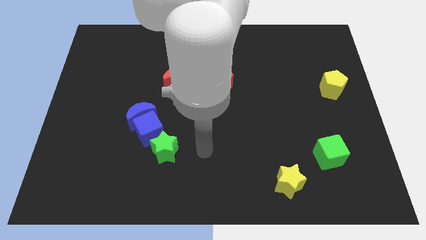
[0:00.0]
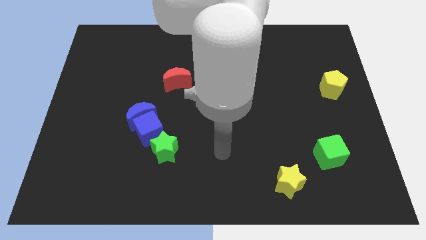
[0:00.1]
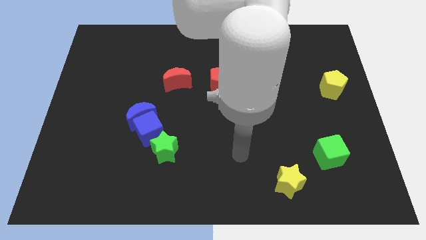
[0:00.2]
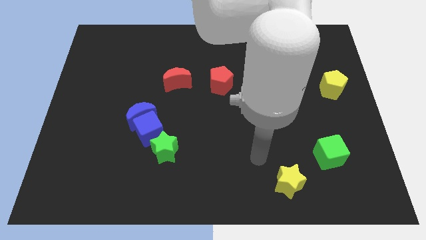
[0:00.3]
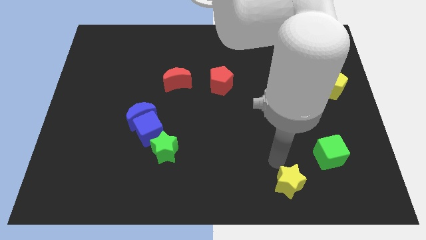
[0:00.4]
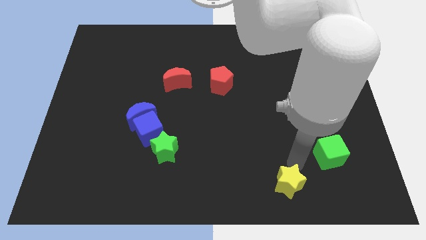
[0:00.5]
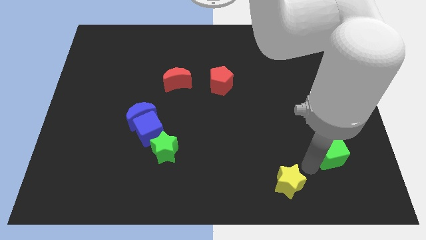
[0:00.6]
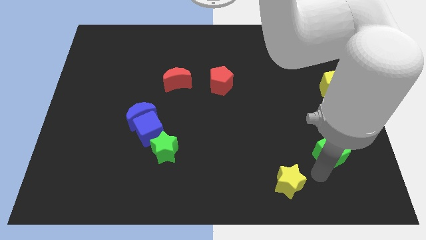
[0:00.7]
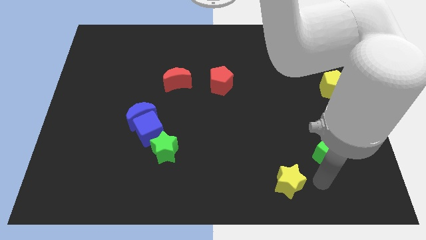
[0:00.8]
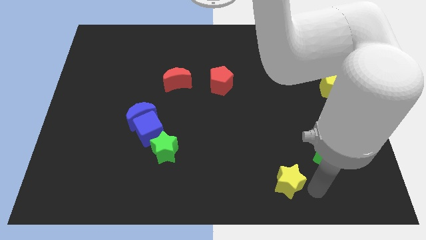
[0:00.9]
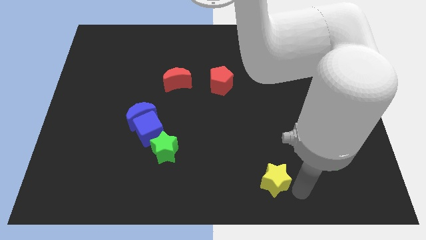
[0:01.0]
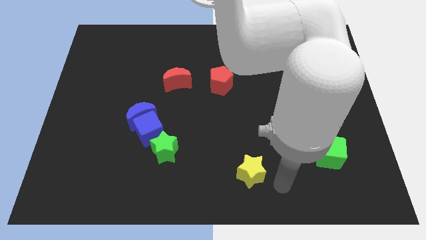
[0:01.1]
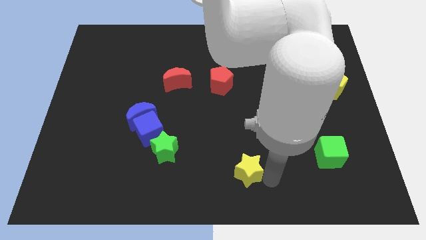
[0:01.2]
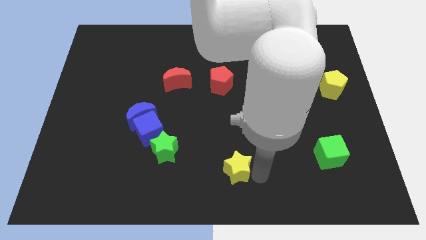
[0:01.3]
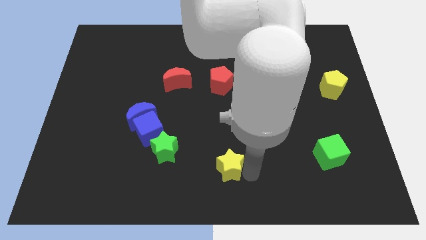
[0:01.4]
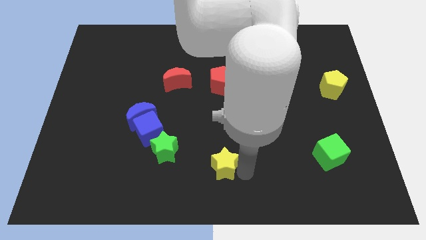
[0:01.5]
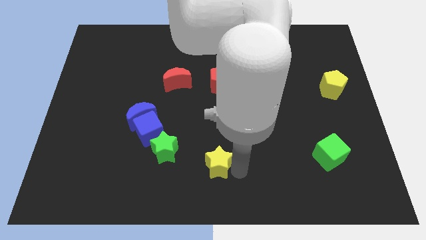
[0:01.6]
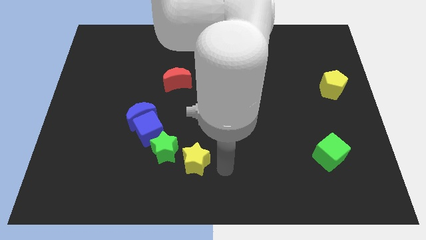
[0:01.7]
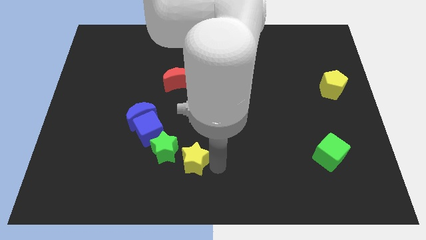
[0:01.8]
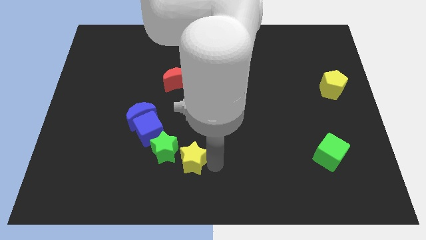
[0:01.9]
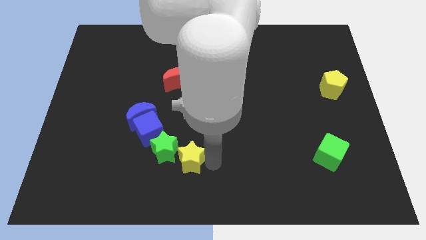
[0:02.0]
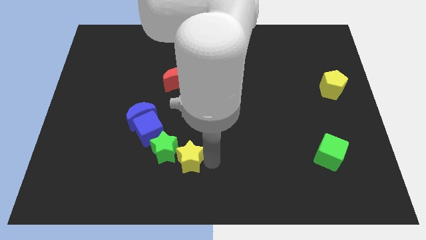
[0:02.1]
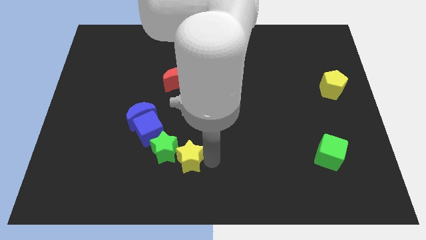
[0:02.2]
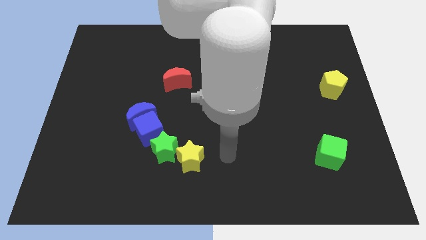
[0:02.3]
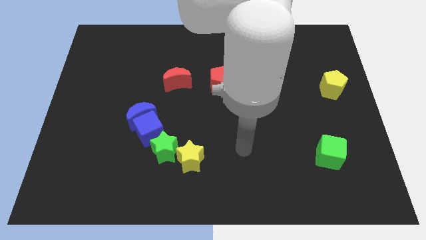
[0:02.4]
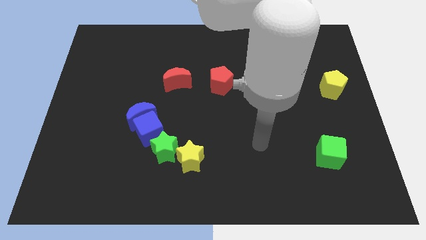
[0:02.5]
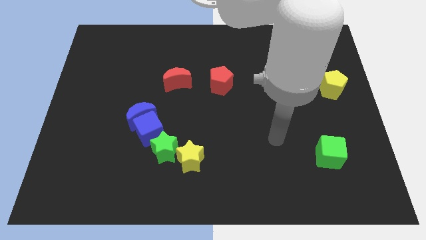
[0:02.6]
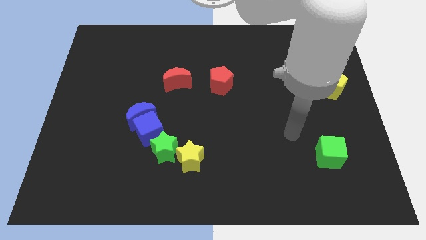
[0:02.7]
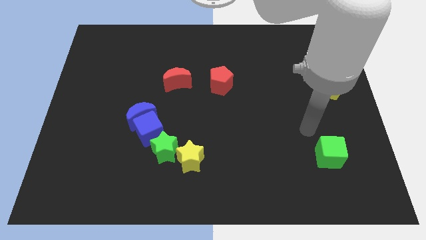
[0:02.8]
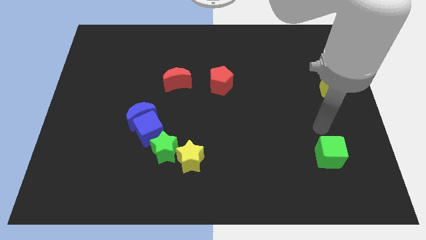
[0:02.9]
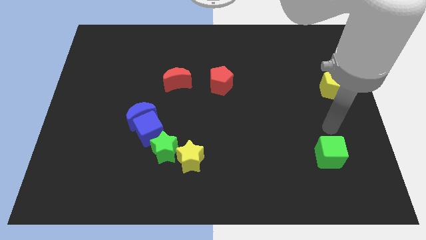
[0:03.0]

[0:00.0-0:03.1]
move the yellow star to the right side of the green star

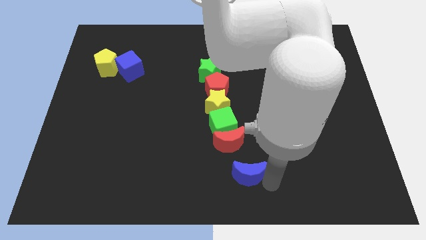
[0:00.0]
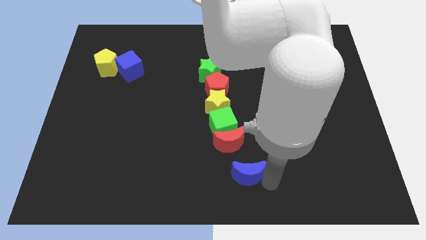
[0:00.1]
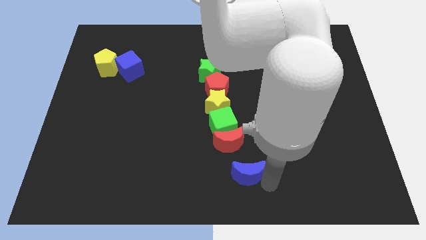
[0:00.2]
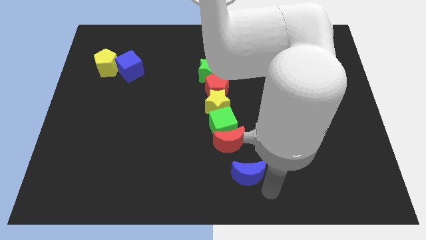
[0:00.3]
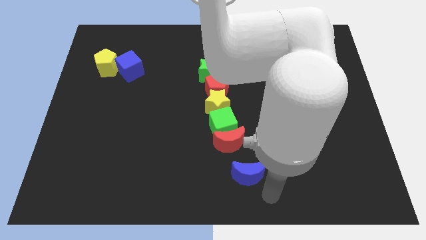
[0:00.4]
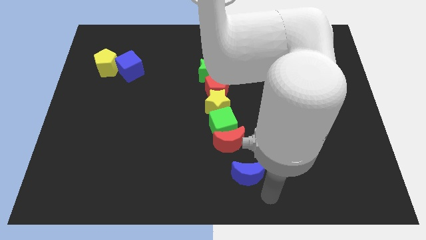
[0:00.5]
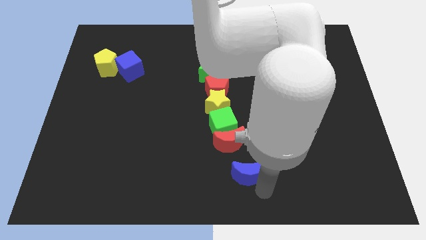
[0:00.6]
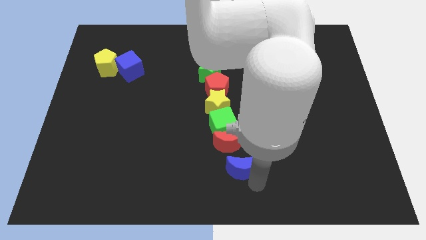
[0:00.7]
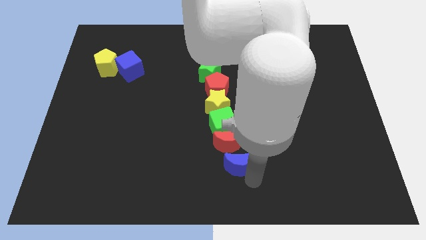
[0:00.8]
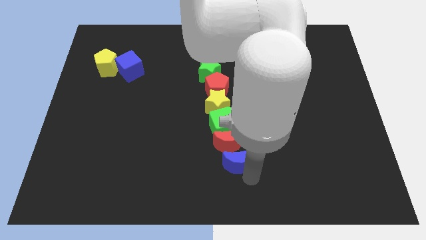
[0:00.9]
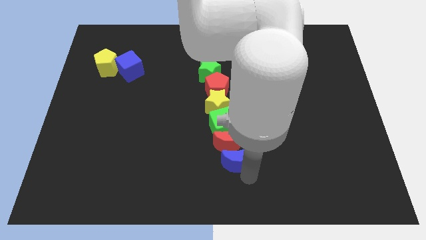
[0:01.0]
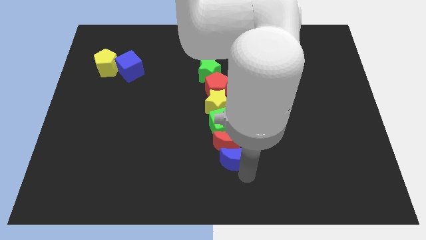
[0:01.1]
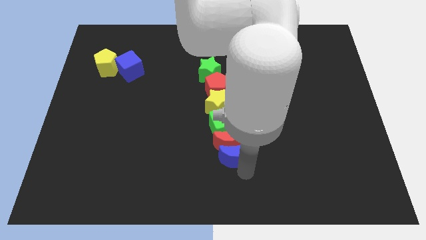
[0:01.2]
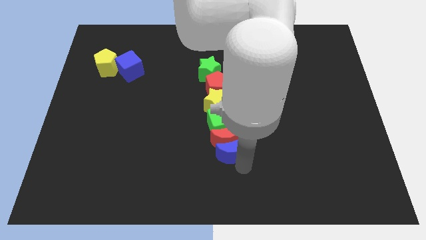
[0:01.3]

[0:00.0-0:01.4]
push the blue crescent into the red crescent

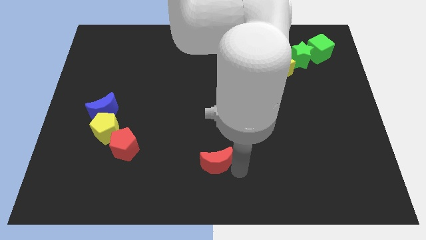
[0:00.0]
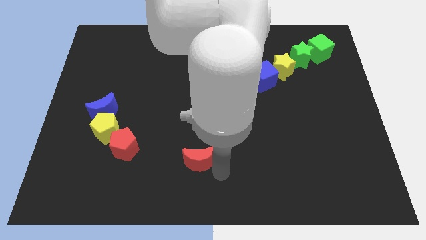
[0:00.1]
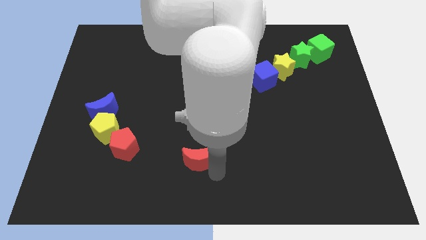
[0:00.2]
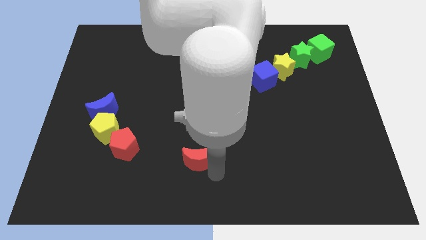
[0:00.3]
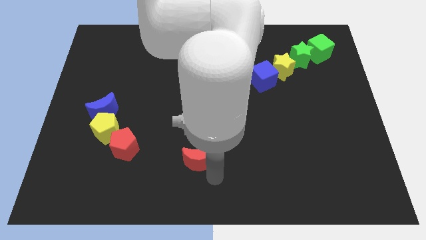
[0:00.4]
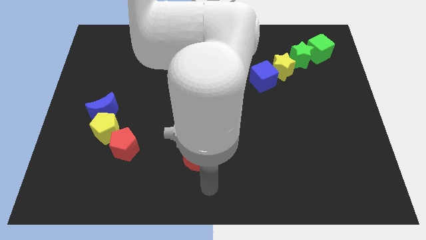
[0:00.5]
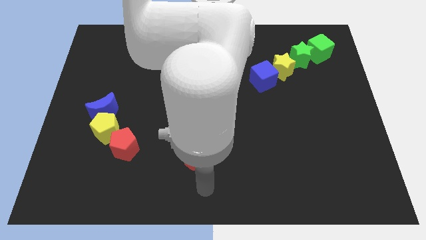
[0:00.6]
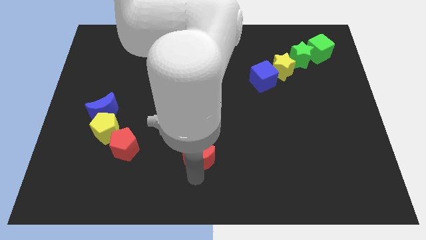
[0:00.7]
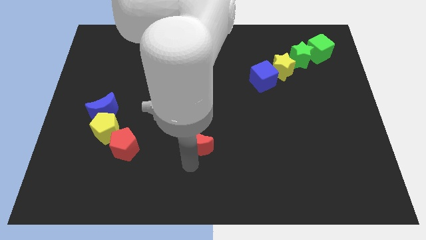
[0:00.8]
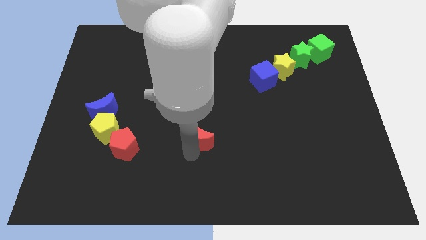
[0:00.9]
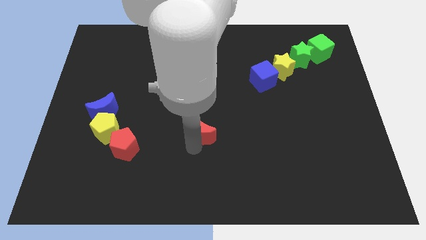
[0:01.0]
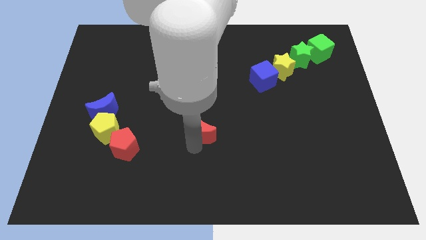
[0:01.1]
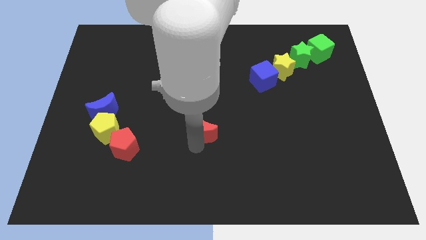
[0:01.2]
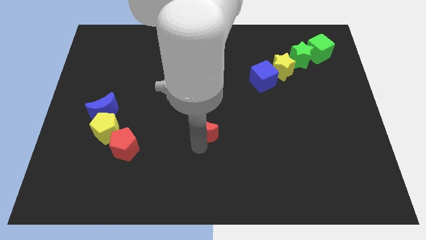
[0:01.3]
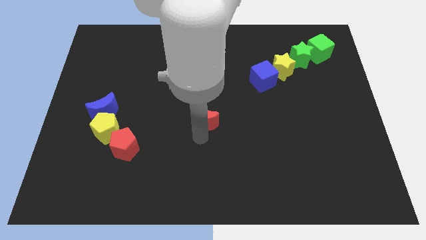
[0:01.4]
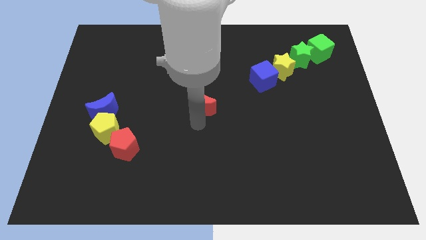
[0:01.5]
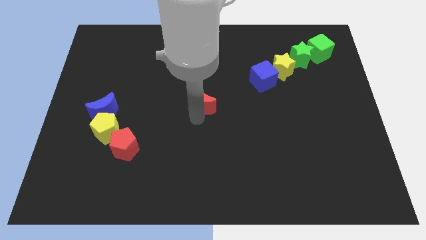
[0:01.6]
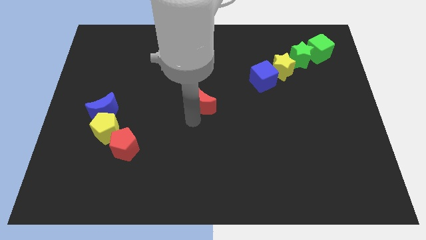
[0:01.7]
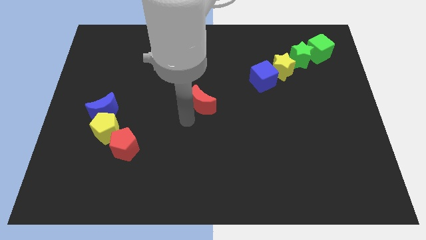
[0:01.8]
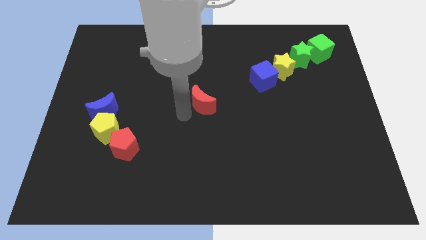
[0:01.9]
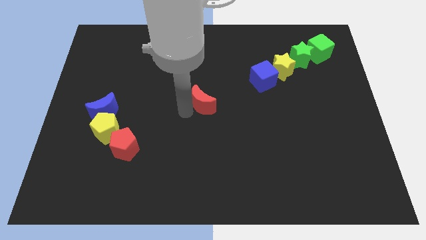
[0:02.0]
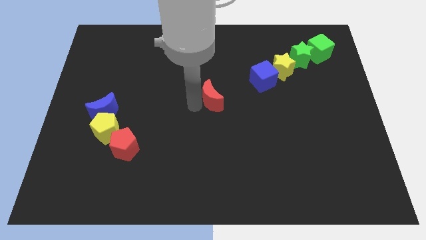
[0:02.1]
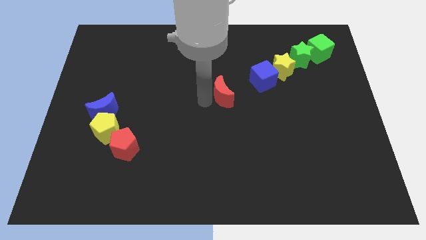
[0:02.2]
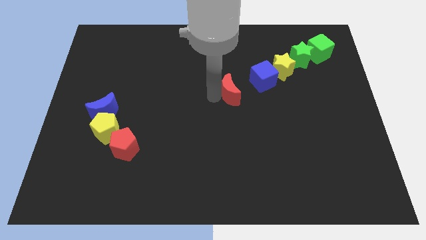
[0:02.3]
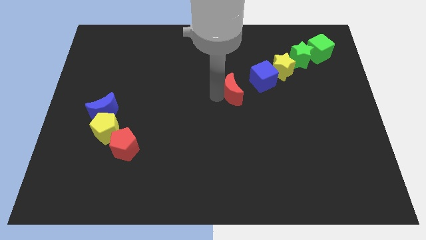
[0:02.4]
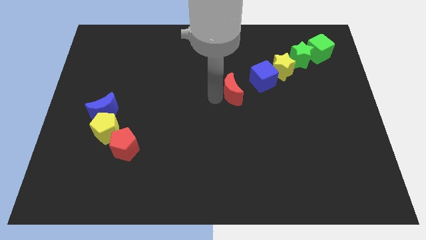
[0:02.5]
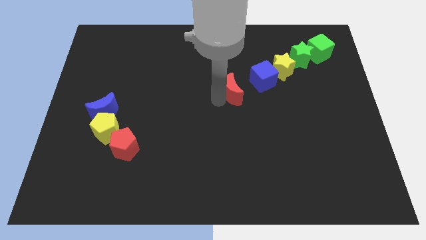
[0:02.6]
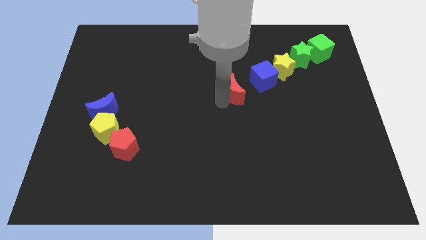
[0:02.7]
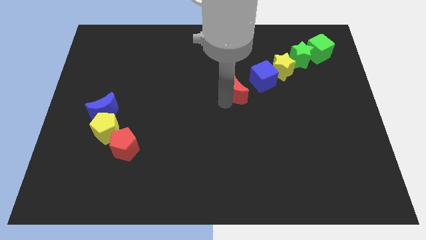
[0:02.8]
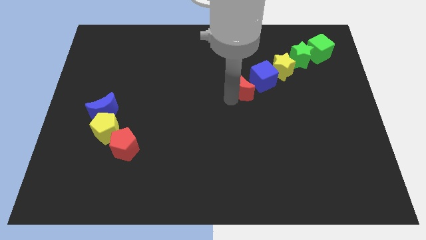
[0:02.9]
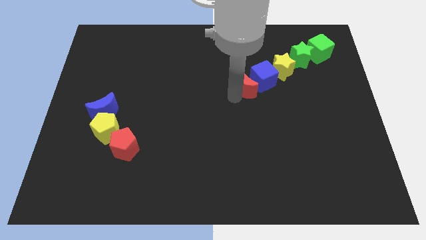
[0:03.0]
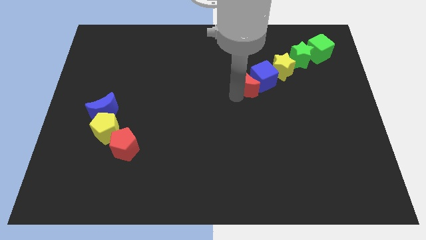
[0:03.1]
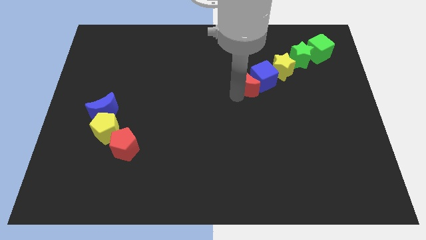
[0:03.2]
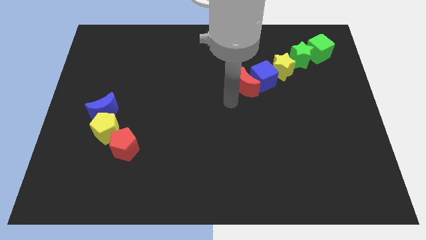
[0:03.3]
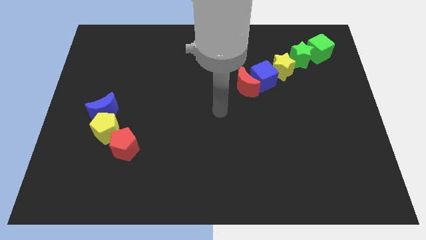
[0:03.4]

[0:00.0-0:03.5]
place the red crescent diagonal to the red pentagon

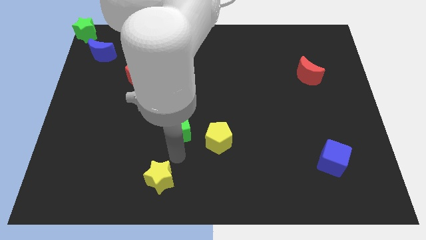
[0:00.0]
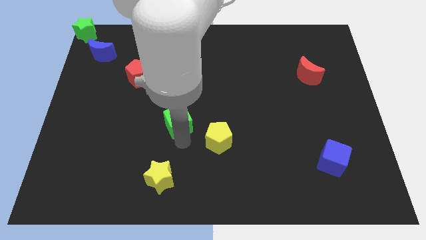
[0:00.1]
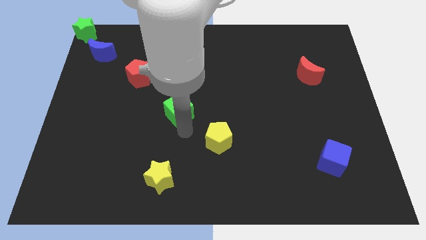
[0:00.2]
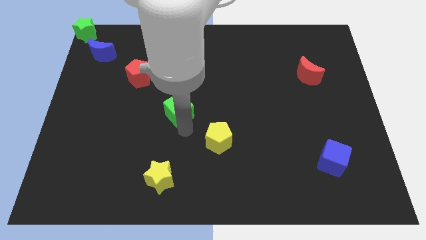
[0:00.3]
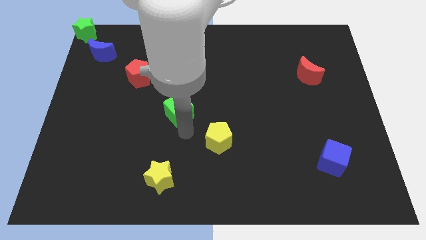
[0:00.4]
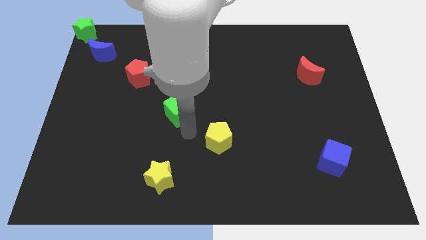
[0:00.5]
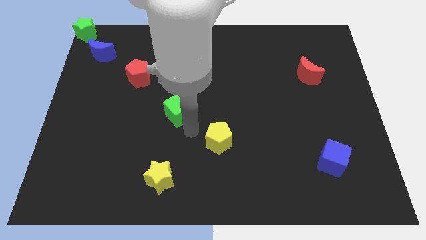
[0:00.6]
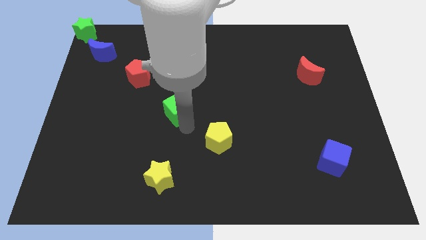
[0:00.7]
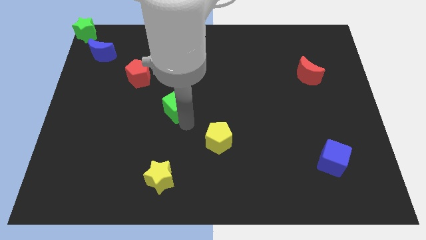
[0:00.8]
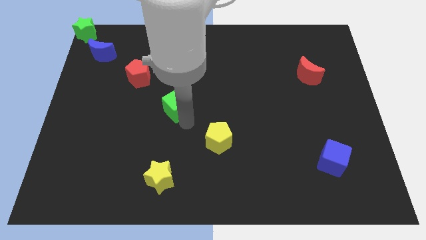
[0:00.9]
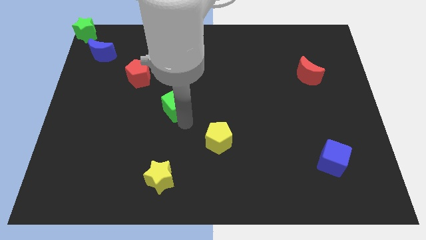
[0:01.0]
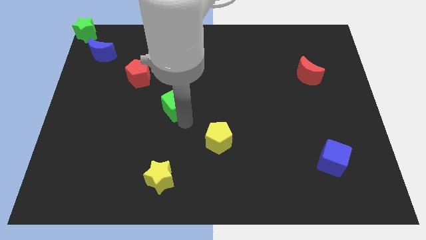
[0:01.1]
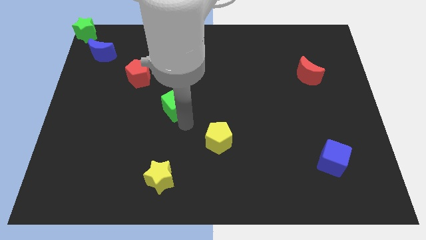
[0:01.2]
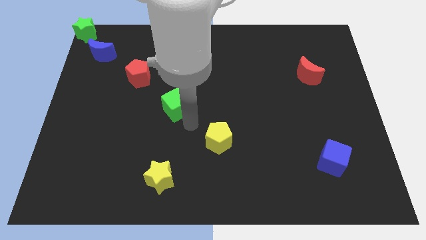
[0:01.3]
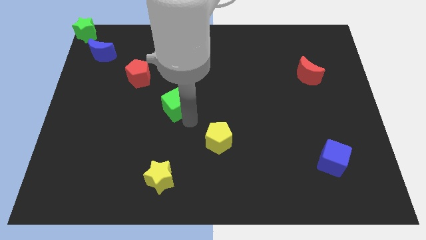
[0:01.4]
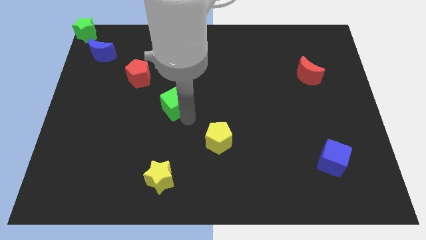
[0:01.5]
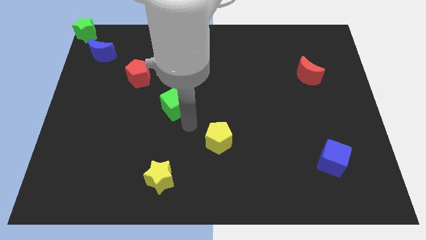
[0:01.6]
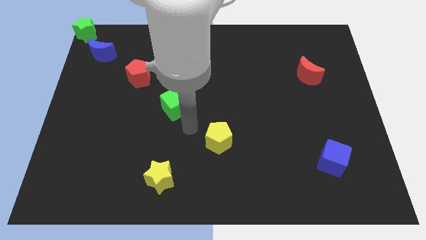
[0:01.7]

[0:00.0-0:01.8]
place the green cube in between red and yellow pentagon
